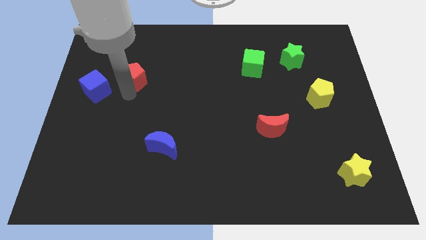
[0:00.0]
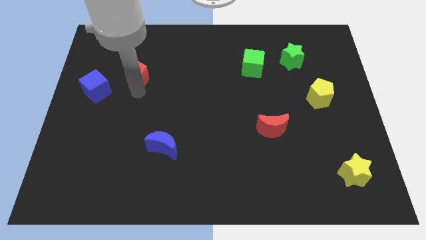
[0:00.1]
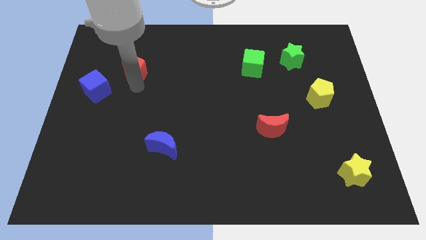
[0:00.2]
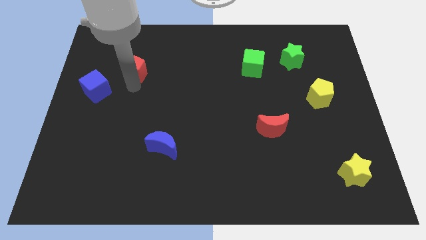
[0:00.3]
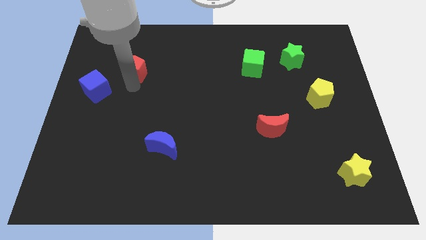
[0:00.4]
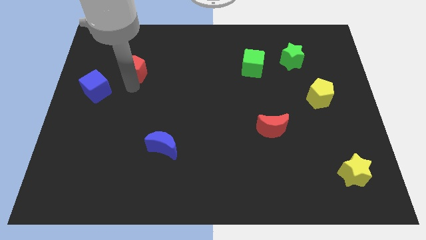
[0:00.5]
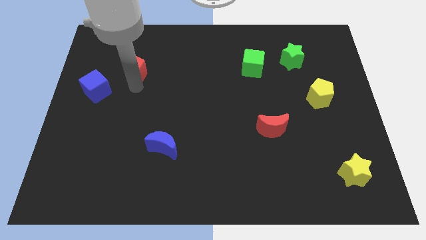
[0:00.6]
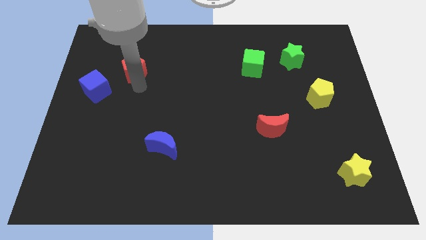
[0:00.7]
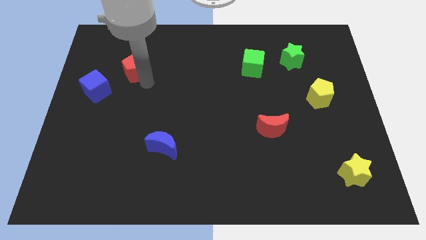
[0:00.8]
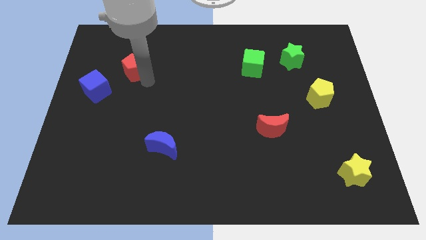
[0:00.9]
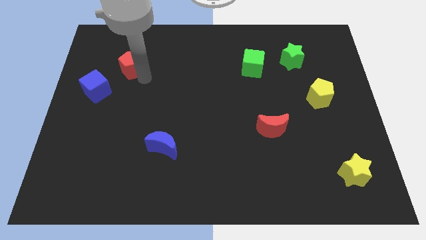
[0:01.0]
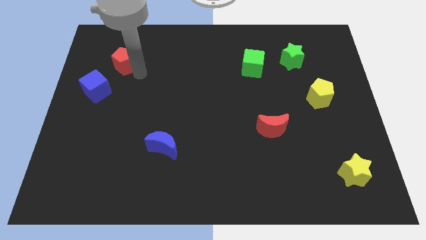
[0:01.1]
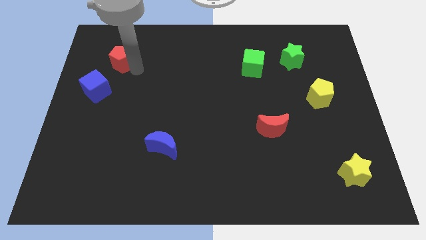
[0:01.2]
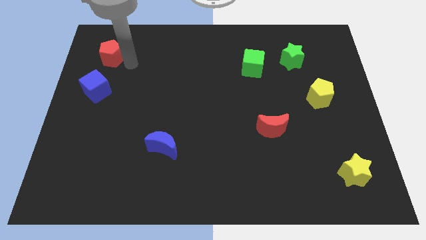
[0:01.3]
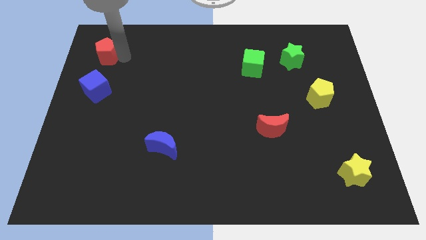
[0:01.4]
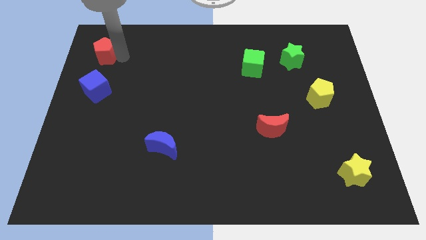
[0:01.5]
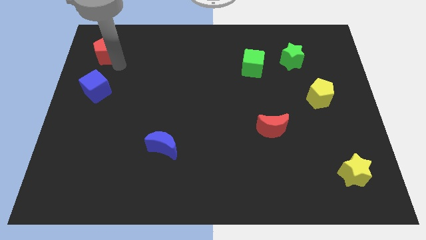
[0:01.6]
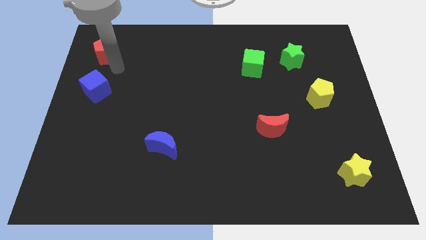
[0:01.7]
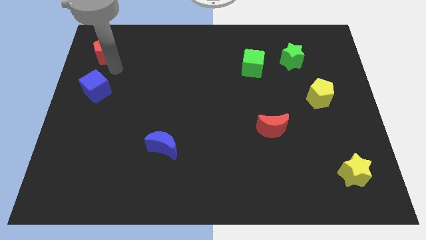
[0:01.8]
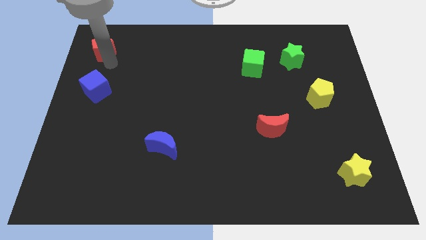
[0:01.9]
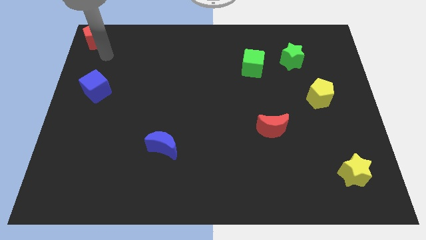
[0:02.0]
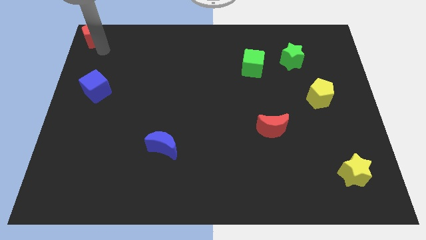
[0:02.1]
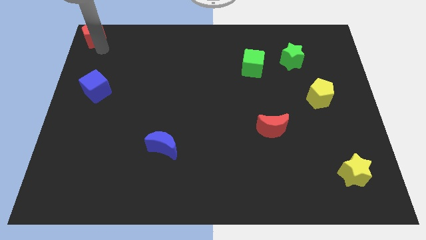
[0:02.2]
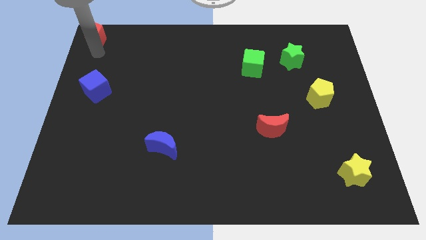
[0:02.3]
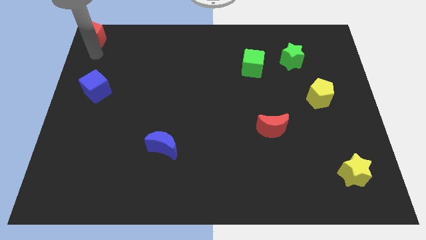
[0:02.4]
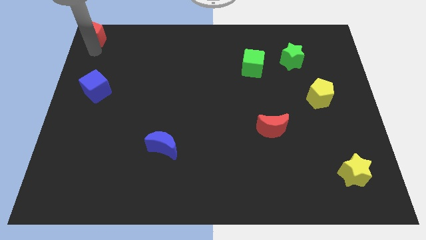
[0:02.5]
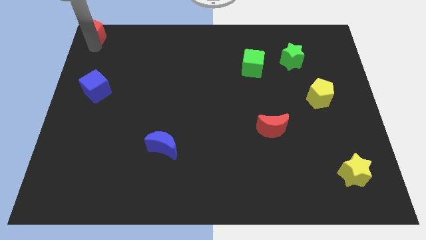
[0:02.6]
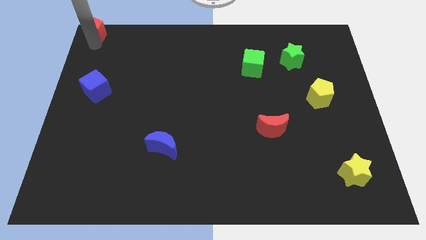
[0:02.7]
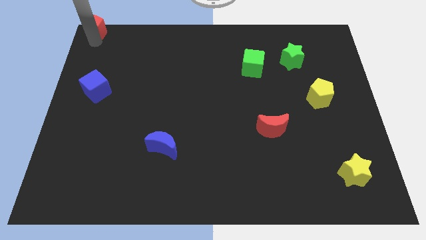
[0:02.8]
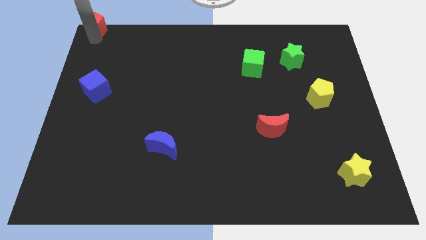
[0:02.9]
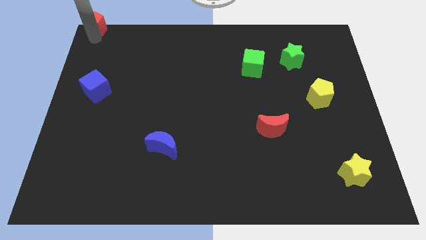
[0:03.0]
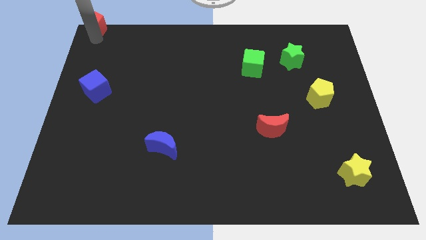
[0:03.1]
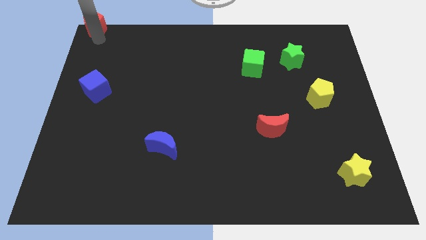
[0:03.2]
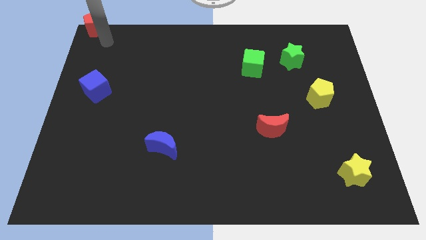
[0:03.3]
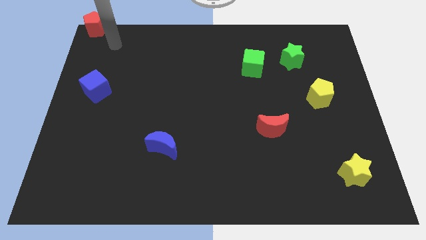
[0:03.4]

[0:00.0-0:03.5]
place the red pentagon at the top left corner

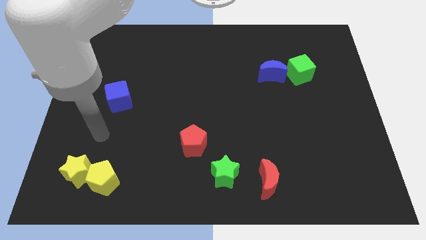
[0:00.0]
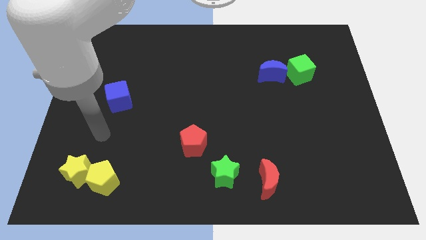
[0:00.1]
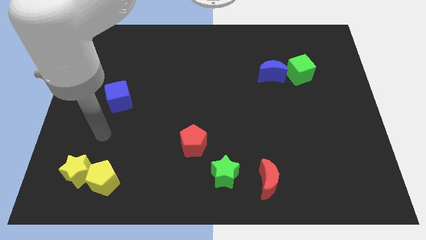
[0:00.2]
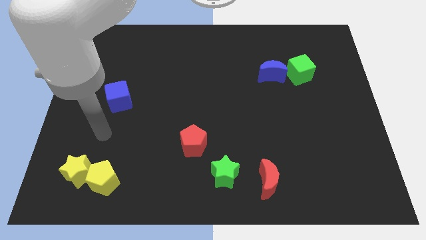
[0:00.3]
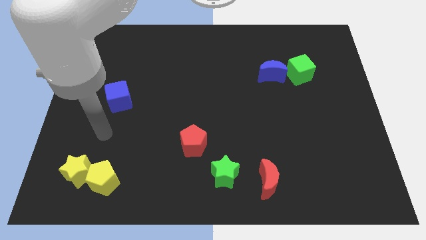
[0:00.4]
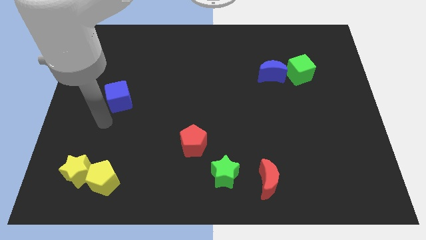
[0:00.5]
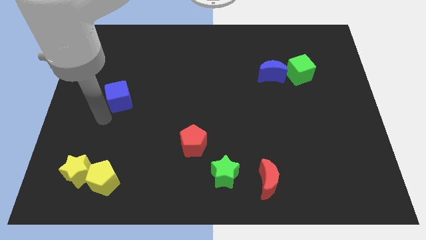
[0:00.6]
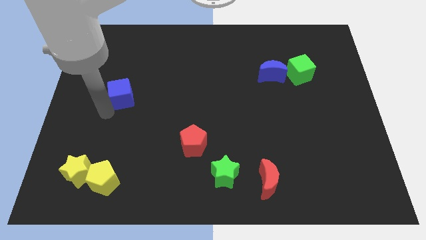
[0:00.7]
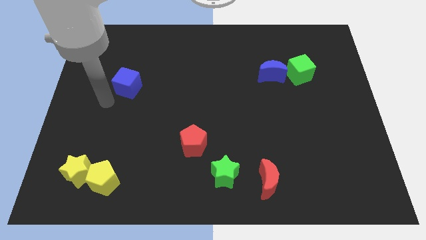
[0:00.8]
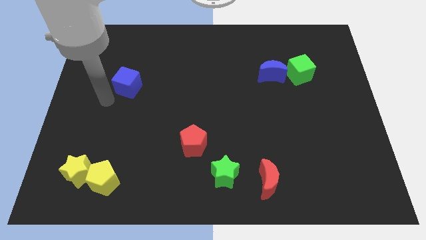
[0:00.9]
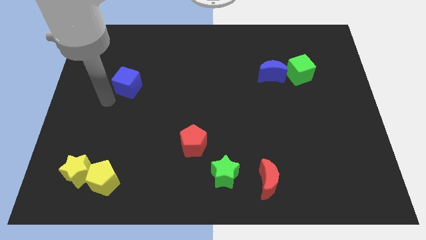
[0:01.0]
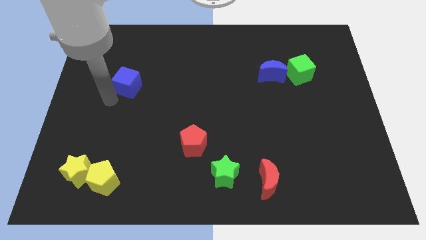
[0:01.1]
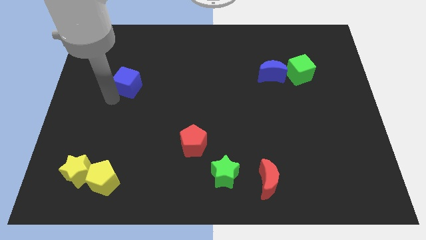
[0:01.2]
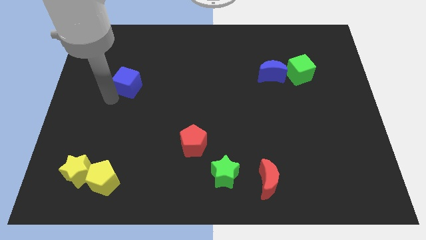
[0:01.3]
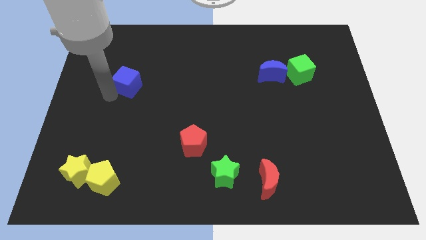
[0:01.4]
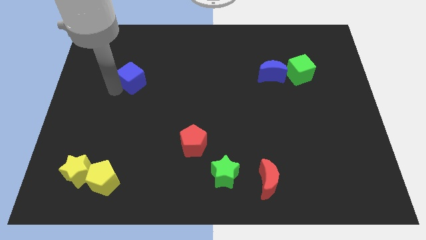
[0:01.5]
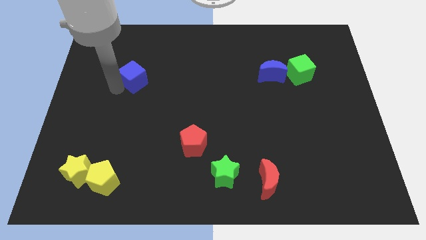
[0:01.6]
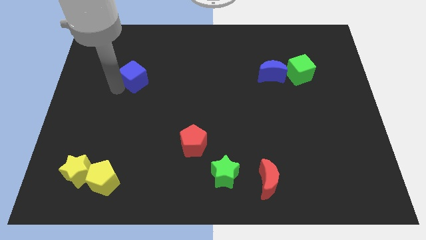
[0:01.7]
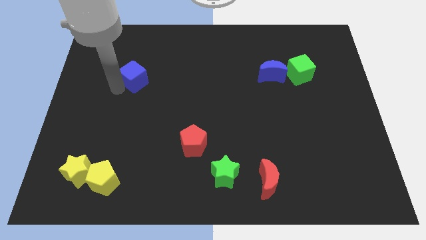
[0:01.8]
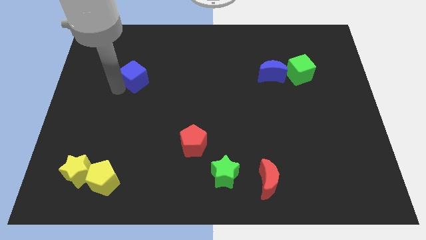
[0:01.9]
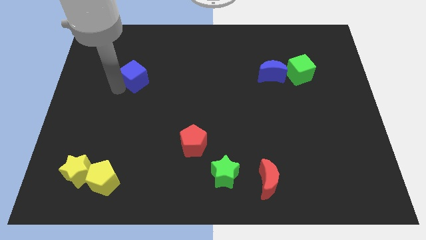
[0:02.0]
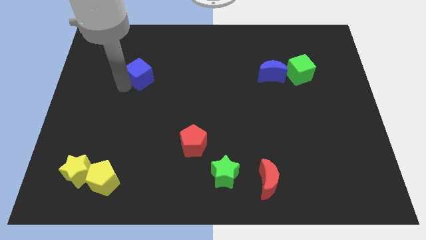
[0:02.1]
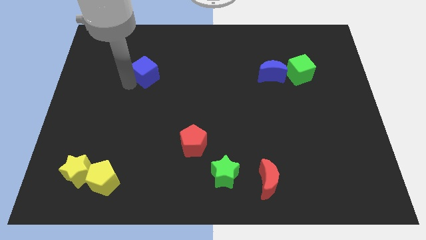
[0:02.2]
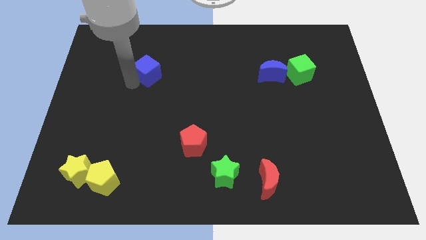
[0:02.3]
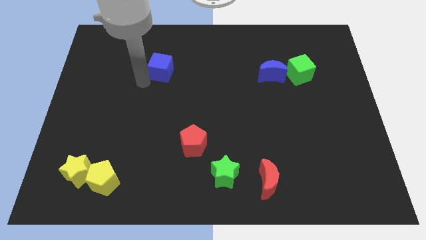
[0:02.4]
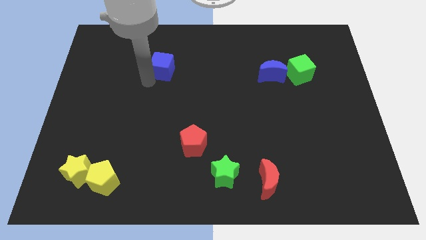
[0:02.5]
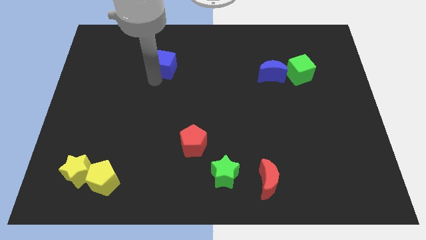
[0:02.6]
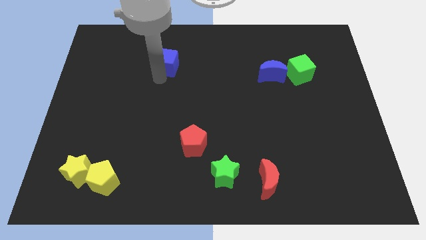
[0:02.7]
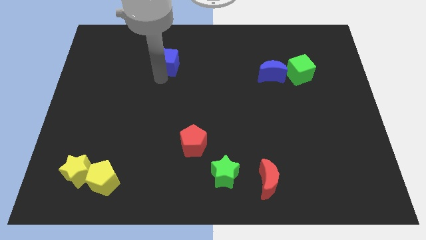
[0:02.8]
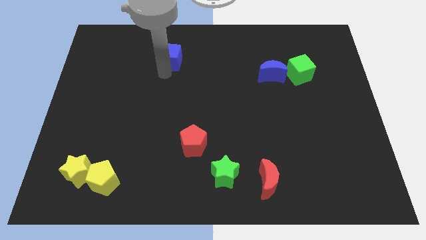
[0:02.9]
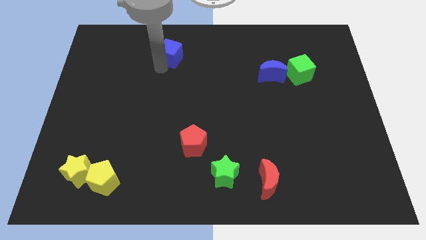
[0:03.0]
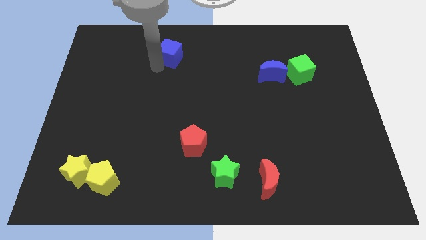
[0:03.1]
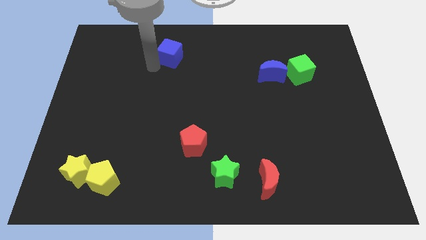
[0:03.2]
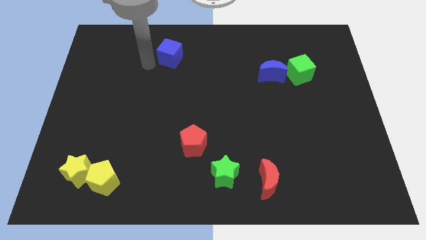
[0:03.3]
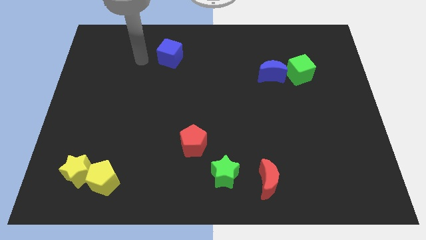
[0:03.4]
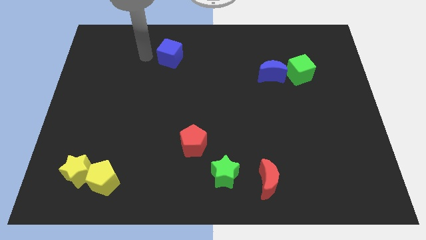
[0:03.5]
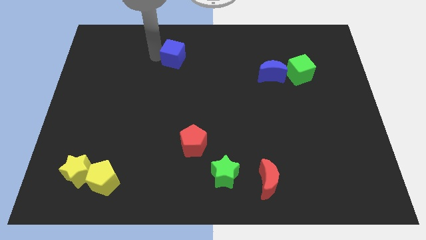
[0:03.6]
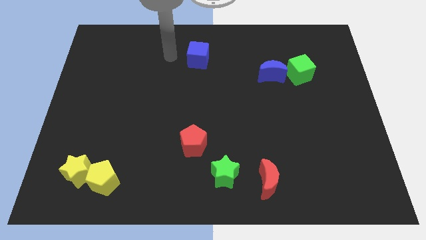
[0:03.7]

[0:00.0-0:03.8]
push blue cube above red pentagon

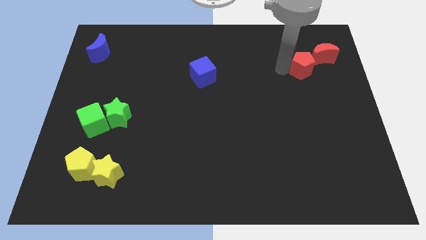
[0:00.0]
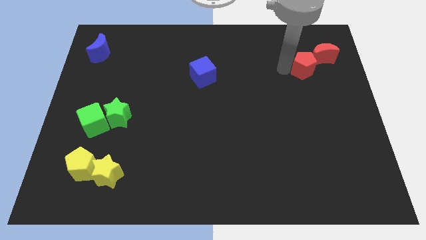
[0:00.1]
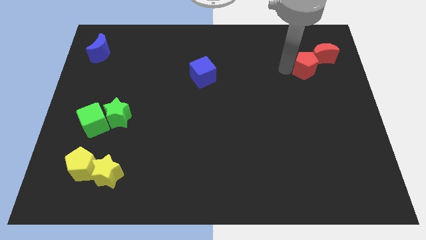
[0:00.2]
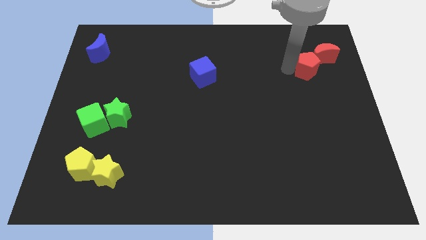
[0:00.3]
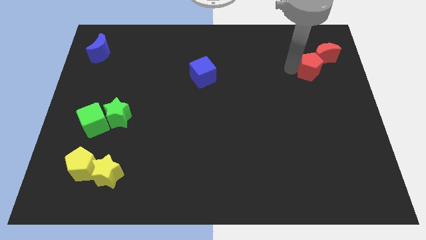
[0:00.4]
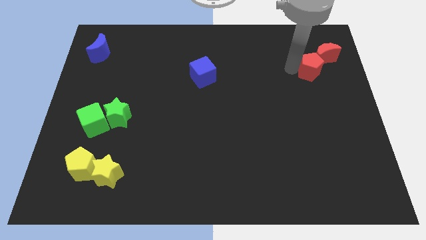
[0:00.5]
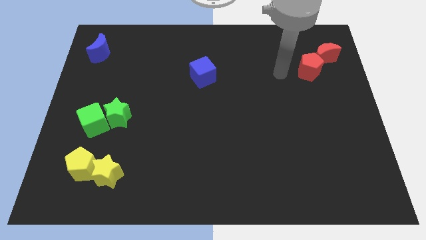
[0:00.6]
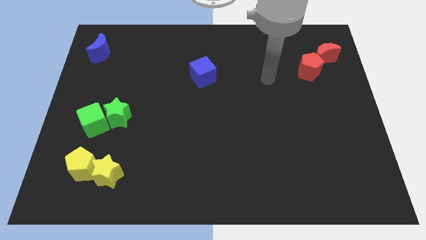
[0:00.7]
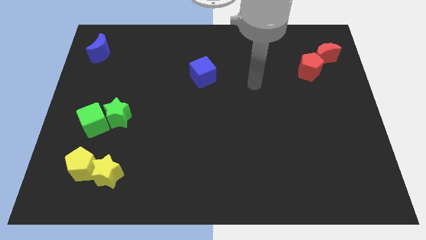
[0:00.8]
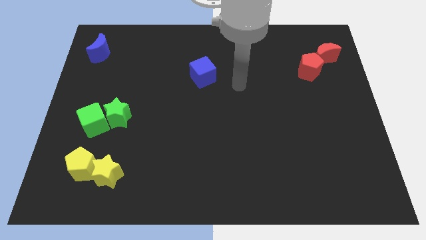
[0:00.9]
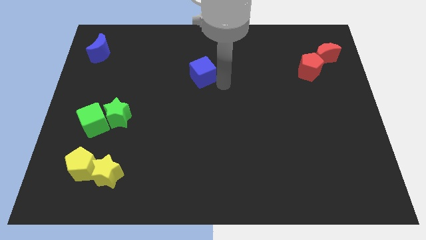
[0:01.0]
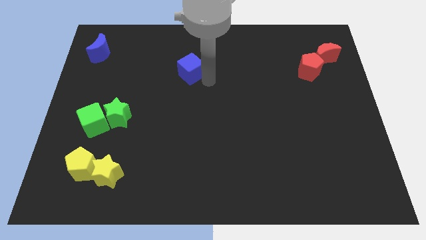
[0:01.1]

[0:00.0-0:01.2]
move arm way from red pentagon

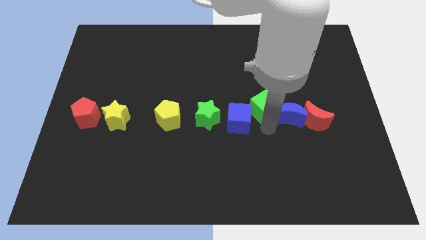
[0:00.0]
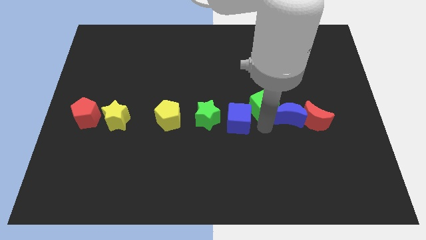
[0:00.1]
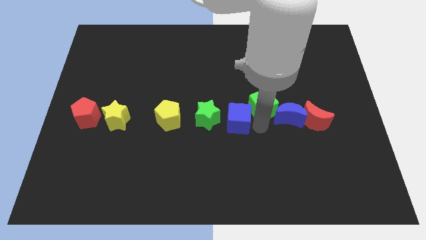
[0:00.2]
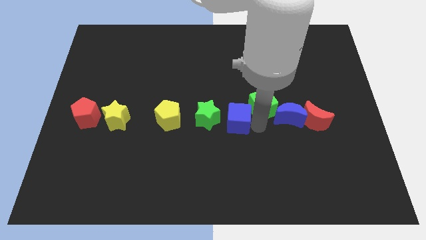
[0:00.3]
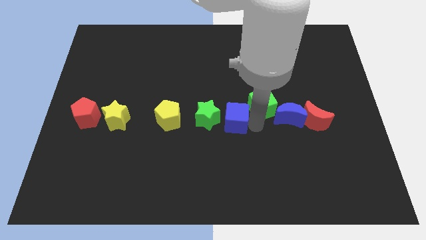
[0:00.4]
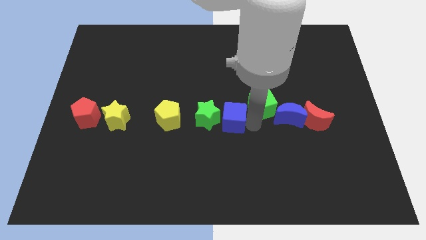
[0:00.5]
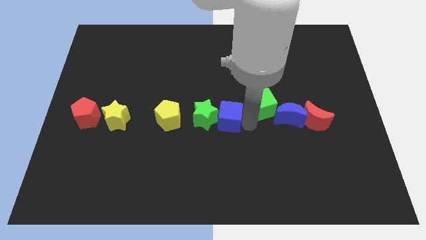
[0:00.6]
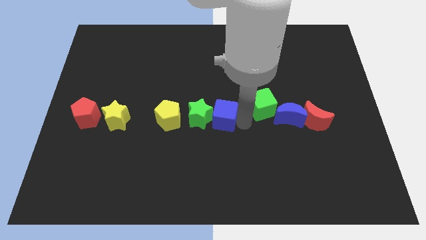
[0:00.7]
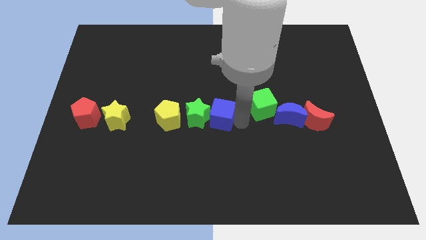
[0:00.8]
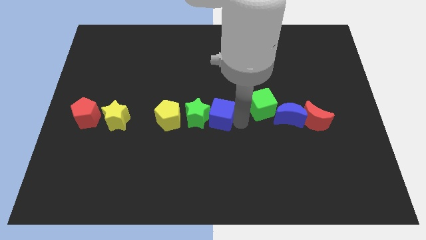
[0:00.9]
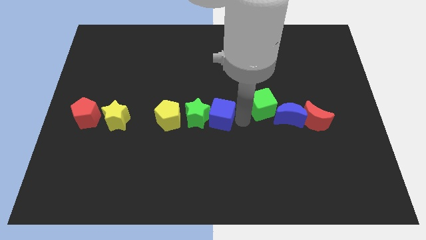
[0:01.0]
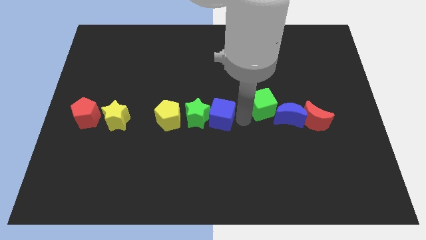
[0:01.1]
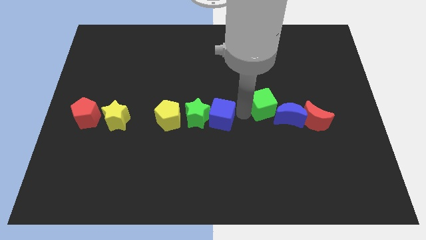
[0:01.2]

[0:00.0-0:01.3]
push the blue cube into the green star
